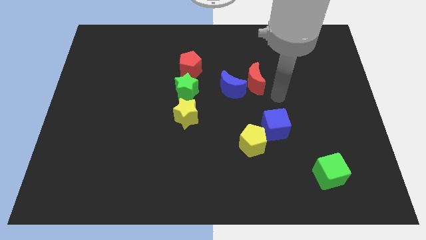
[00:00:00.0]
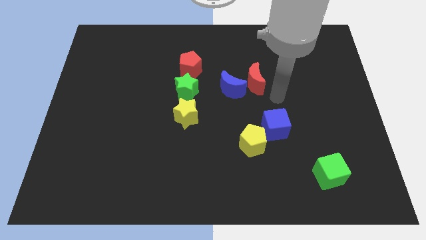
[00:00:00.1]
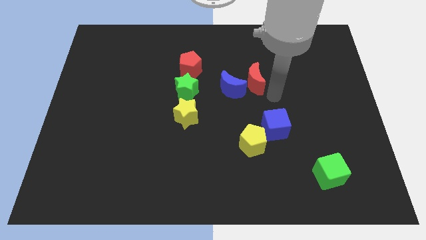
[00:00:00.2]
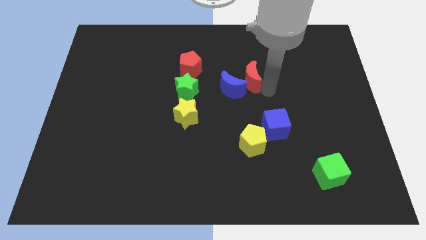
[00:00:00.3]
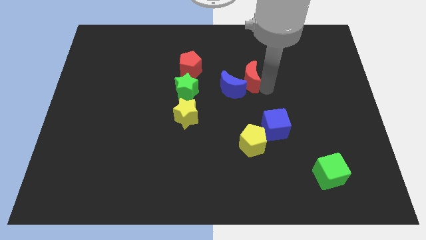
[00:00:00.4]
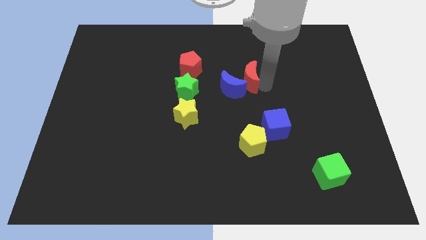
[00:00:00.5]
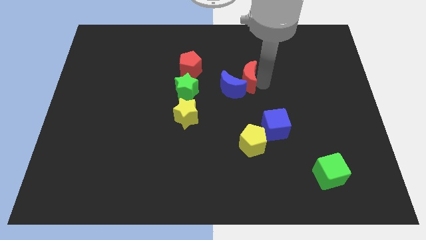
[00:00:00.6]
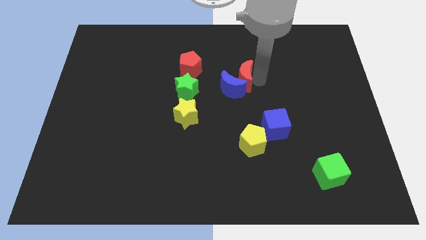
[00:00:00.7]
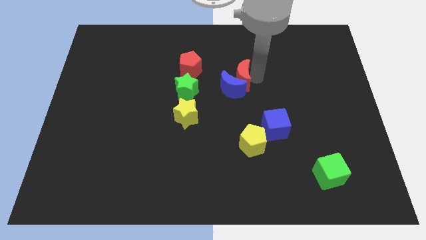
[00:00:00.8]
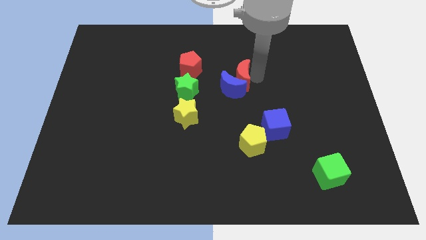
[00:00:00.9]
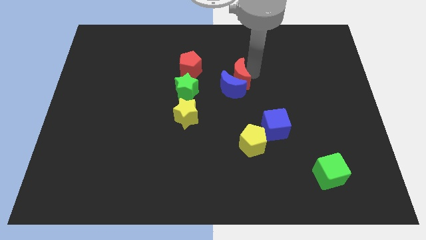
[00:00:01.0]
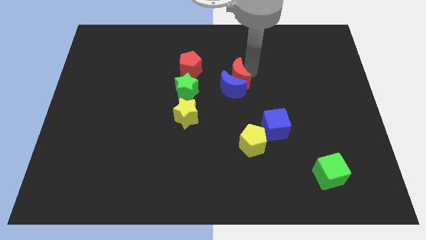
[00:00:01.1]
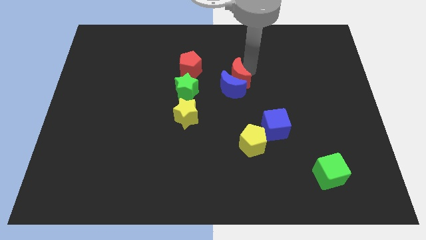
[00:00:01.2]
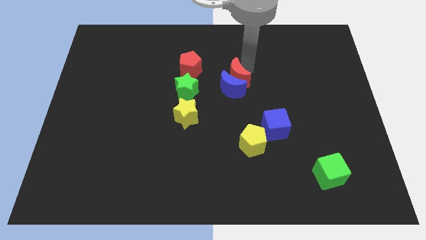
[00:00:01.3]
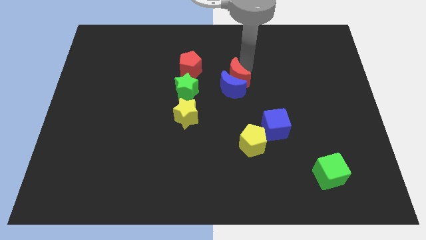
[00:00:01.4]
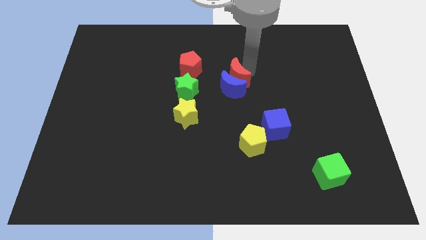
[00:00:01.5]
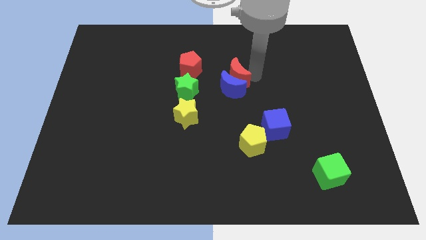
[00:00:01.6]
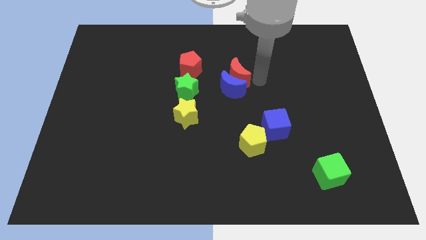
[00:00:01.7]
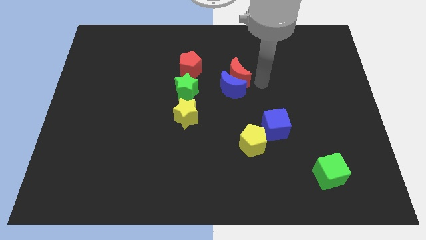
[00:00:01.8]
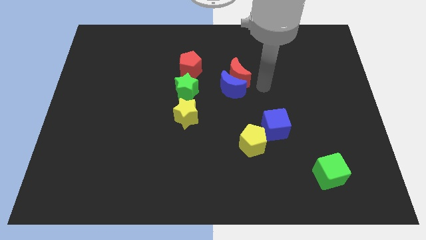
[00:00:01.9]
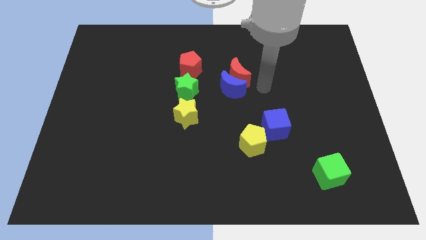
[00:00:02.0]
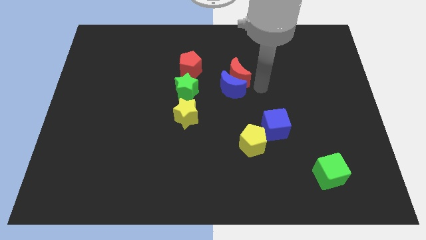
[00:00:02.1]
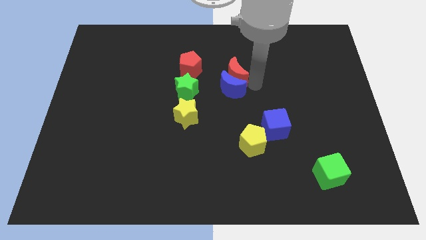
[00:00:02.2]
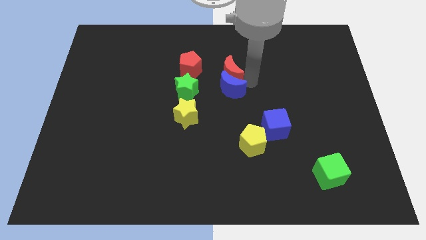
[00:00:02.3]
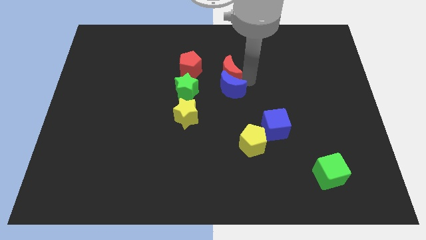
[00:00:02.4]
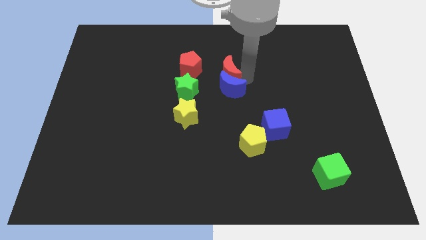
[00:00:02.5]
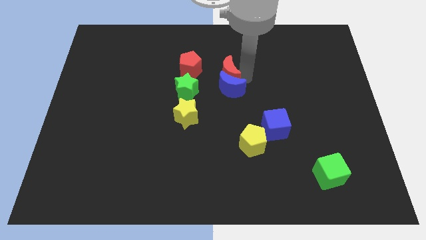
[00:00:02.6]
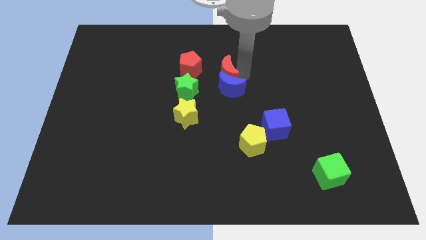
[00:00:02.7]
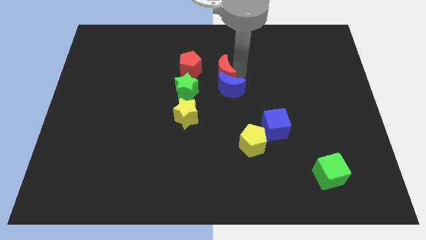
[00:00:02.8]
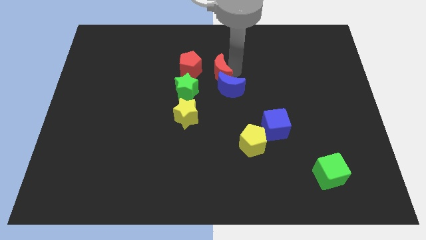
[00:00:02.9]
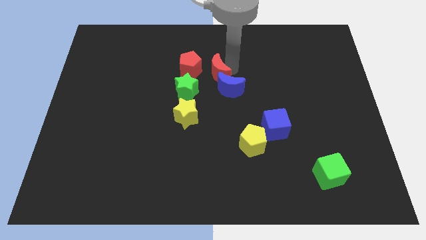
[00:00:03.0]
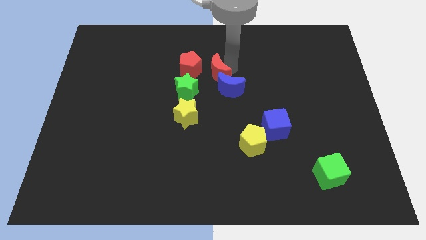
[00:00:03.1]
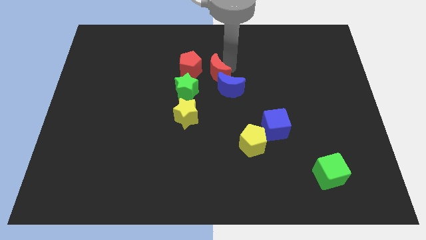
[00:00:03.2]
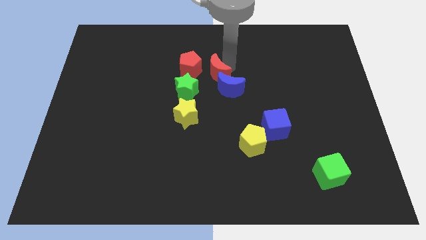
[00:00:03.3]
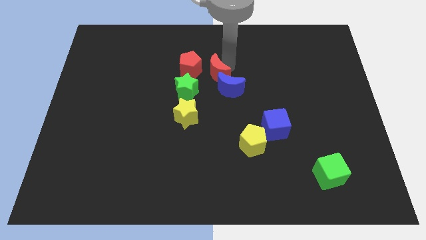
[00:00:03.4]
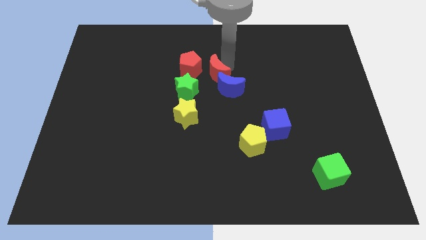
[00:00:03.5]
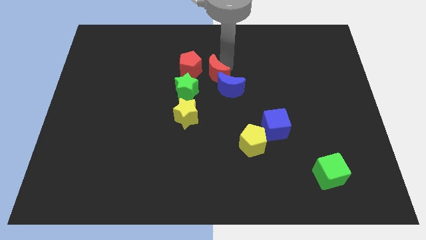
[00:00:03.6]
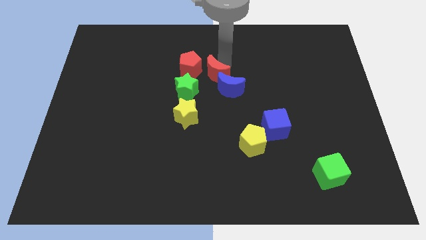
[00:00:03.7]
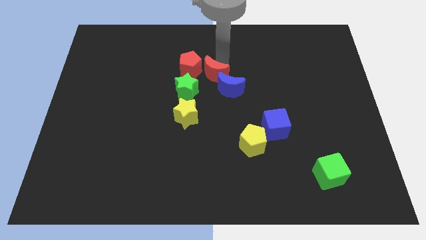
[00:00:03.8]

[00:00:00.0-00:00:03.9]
place the red crescent left above the blue moon

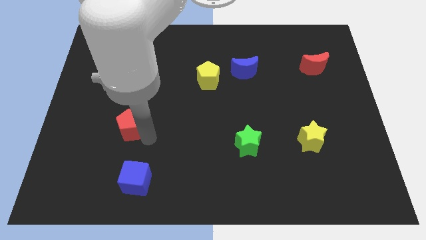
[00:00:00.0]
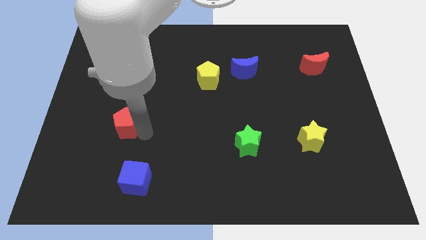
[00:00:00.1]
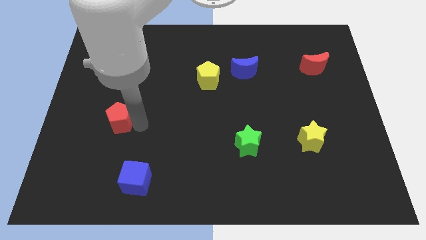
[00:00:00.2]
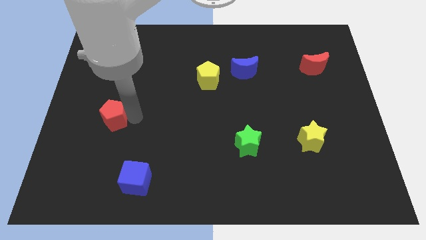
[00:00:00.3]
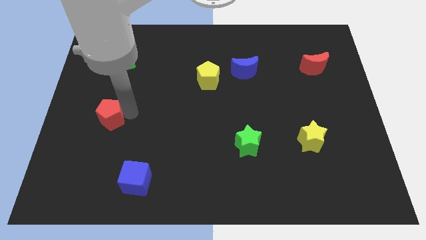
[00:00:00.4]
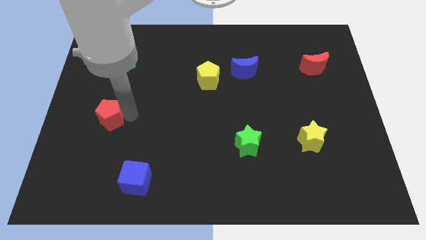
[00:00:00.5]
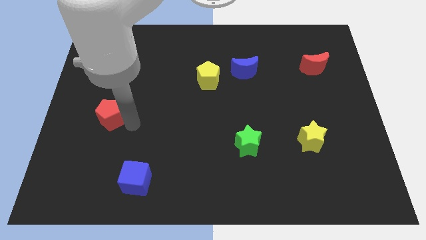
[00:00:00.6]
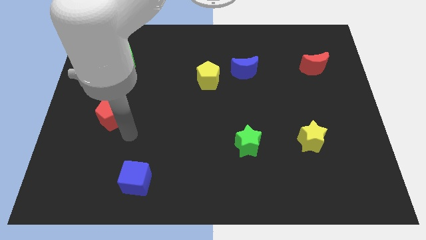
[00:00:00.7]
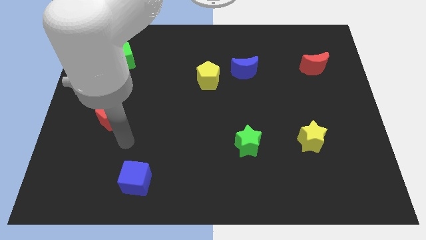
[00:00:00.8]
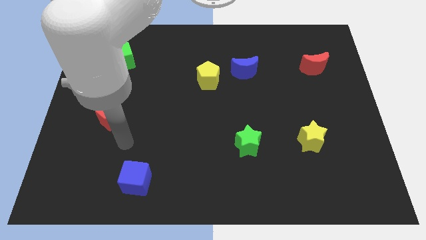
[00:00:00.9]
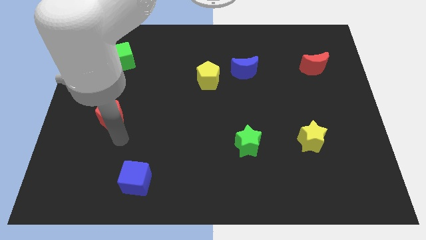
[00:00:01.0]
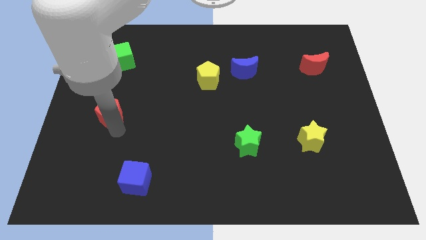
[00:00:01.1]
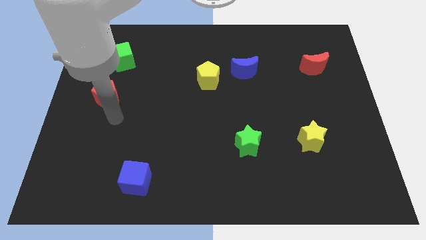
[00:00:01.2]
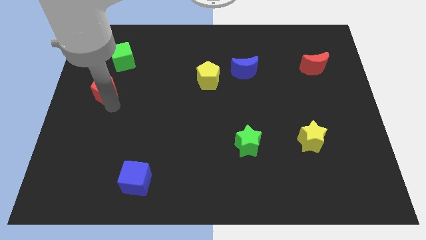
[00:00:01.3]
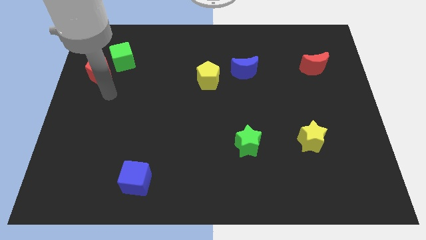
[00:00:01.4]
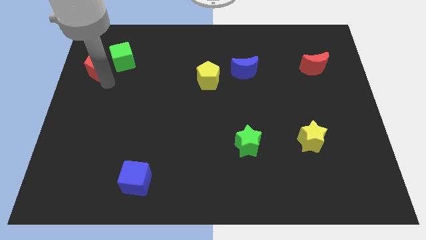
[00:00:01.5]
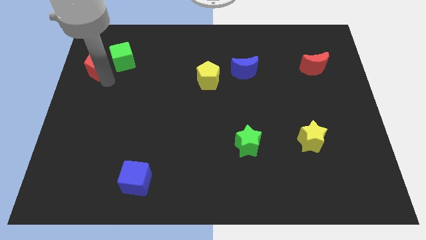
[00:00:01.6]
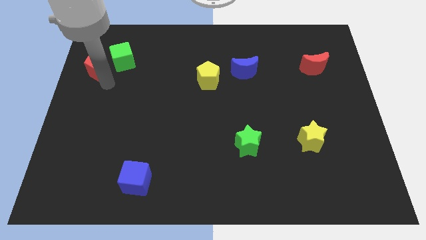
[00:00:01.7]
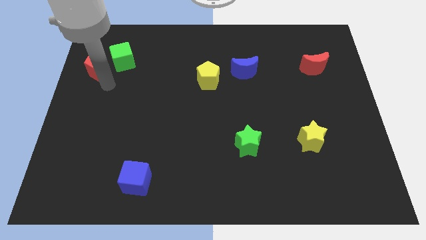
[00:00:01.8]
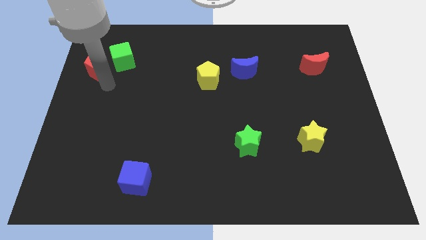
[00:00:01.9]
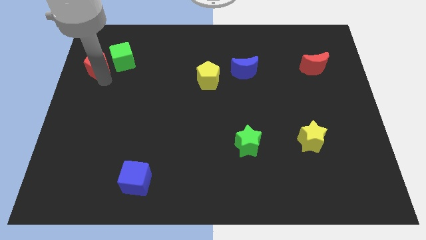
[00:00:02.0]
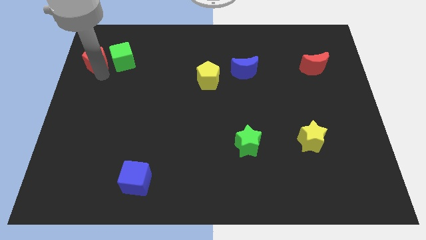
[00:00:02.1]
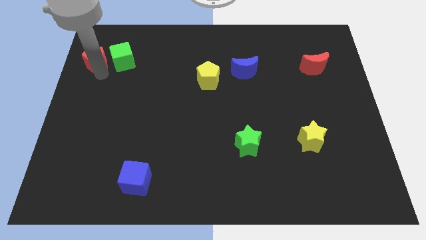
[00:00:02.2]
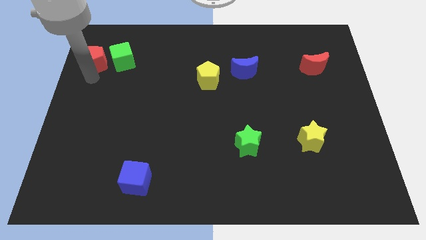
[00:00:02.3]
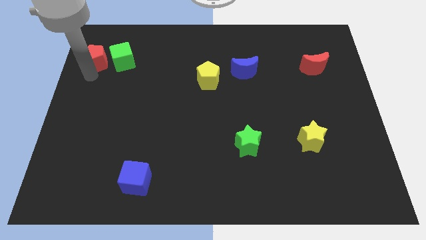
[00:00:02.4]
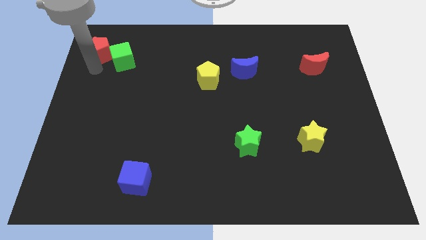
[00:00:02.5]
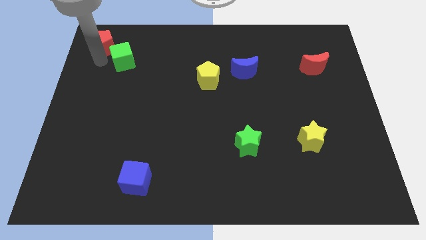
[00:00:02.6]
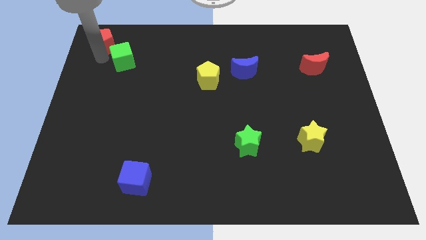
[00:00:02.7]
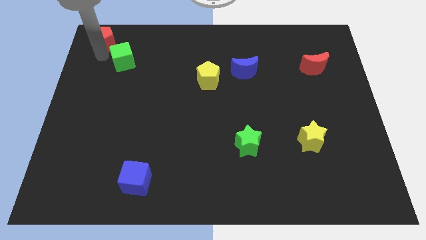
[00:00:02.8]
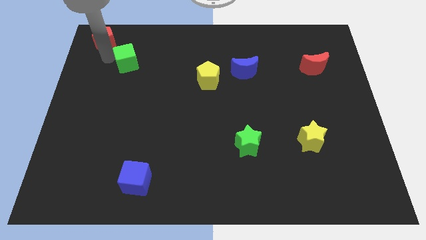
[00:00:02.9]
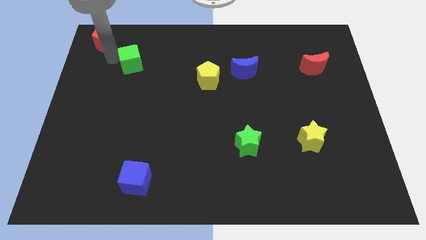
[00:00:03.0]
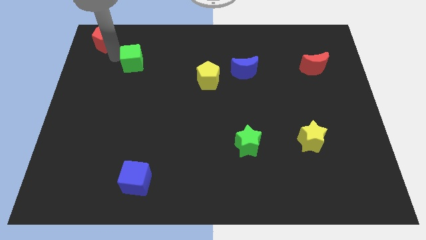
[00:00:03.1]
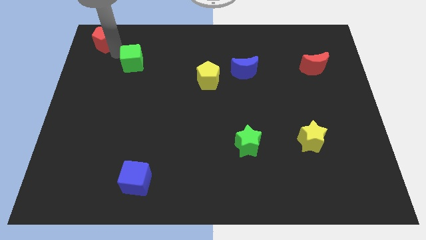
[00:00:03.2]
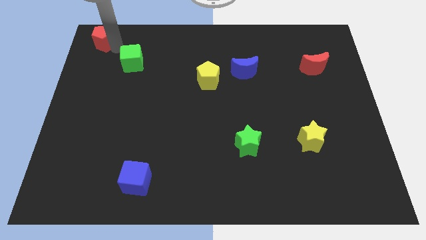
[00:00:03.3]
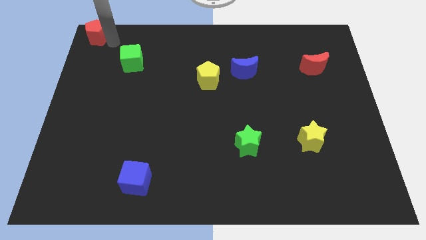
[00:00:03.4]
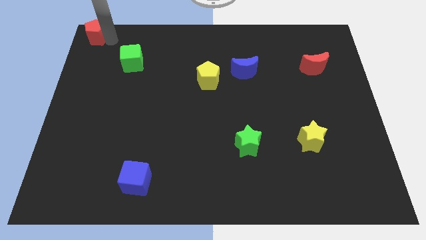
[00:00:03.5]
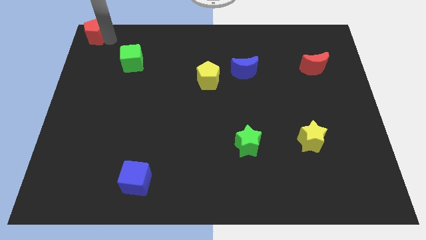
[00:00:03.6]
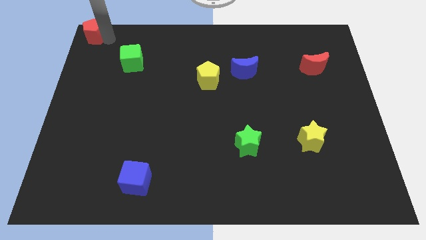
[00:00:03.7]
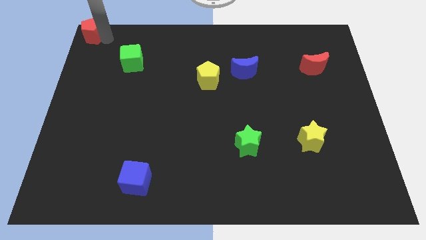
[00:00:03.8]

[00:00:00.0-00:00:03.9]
place the red pentagon towards to the top left corner of the board

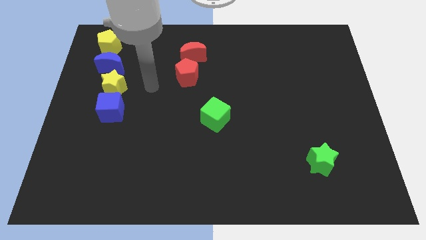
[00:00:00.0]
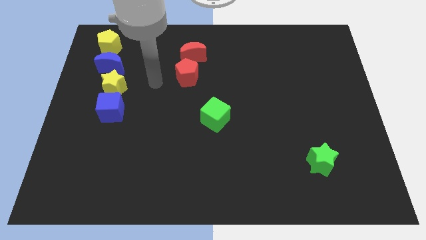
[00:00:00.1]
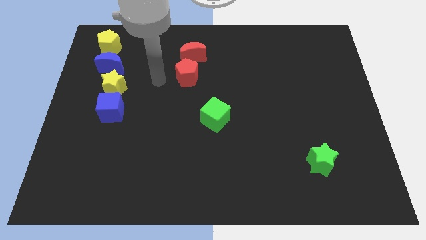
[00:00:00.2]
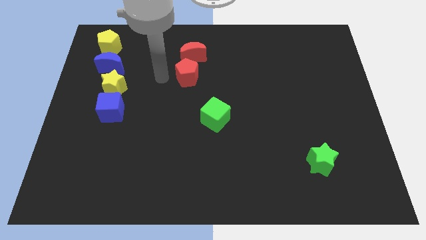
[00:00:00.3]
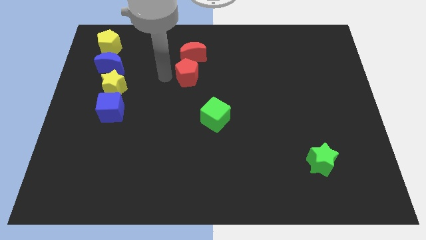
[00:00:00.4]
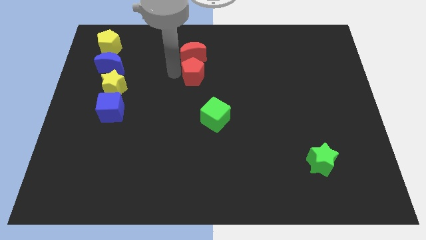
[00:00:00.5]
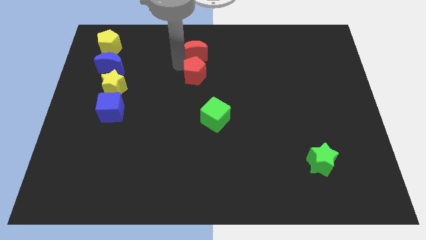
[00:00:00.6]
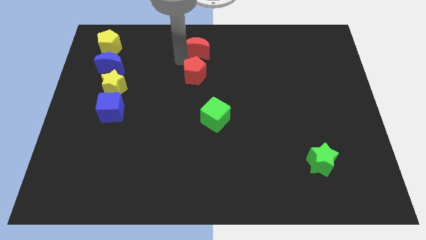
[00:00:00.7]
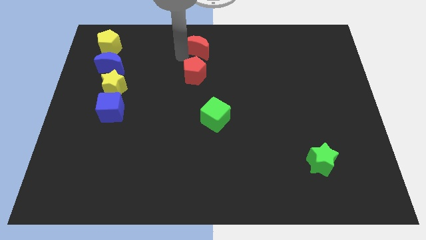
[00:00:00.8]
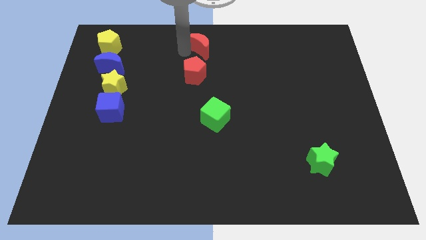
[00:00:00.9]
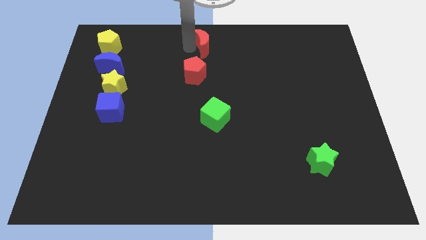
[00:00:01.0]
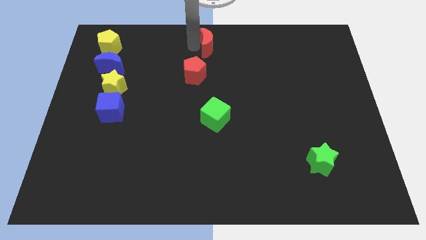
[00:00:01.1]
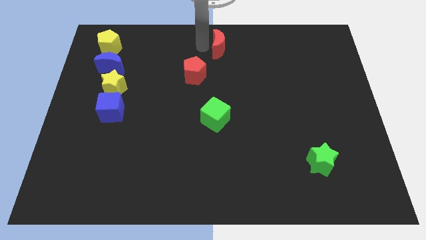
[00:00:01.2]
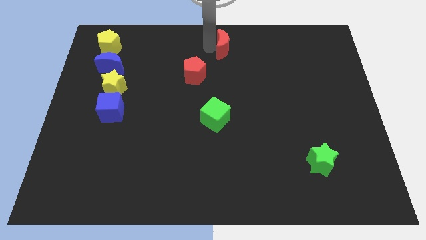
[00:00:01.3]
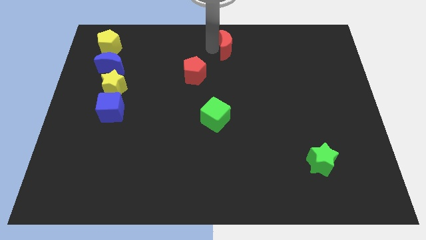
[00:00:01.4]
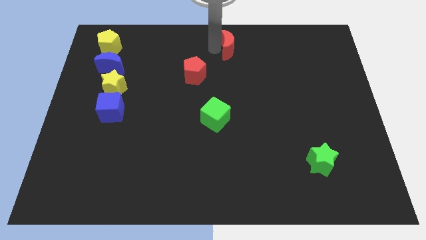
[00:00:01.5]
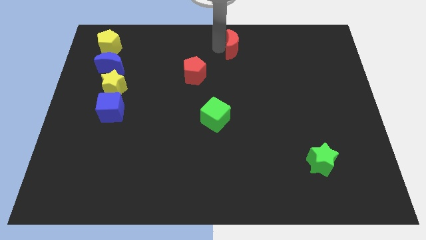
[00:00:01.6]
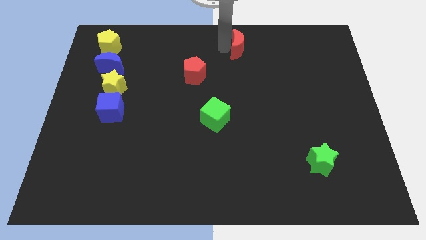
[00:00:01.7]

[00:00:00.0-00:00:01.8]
move the red crescent slightly to the right side of the board
